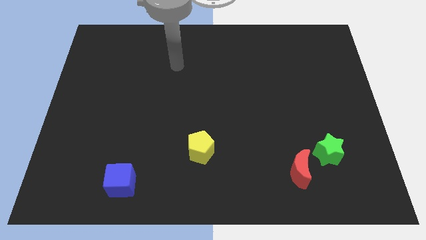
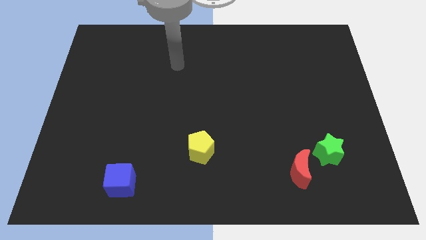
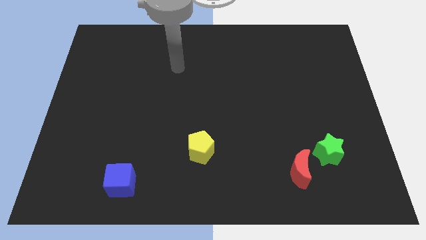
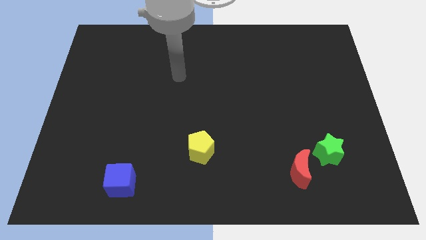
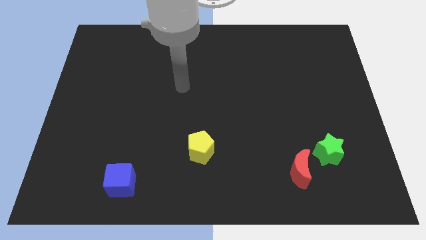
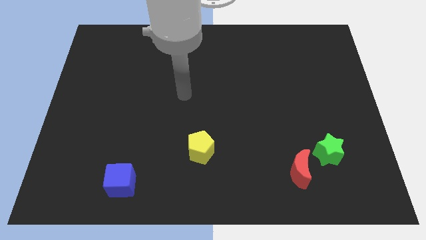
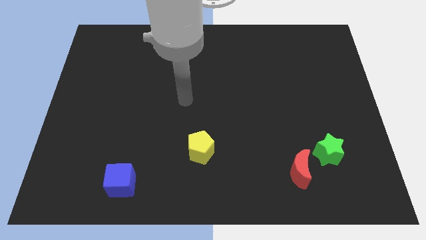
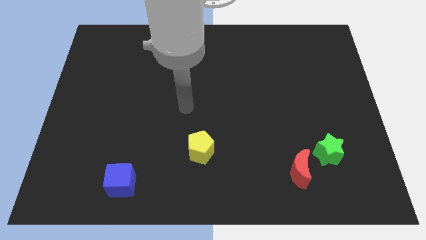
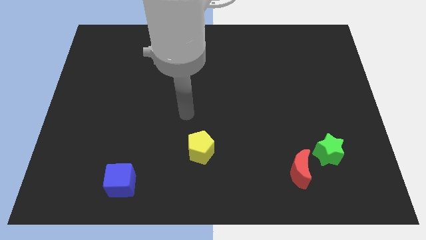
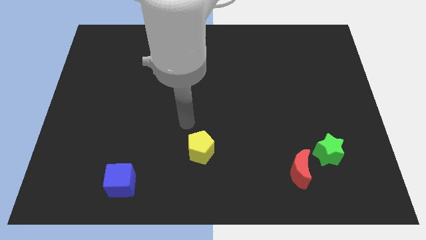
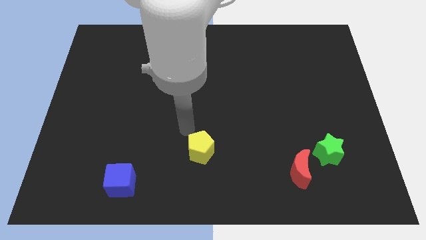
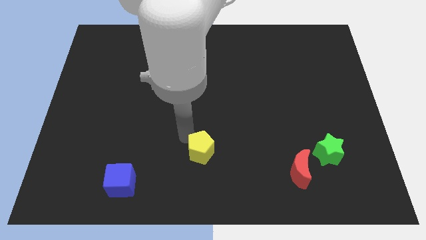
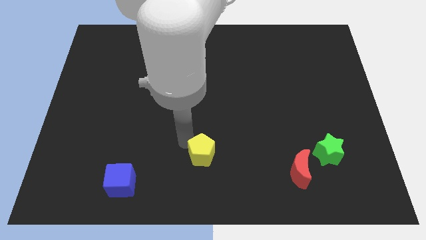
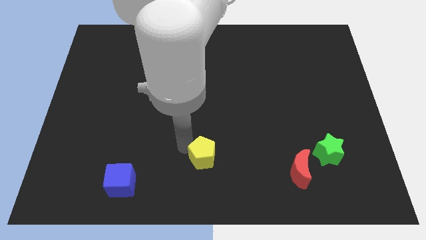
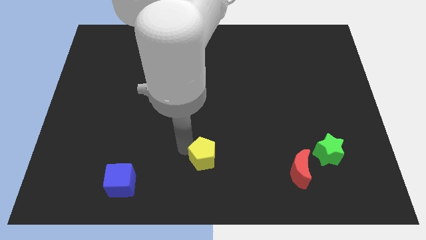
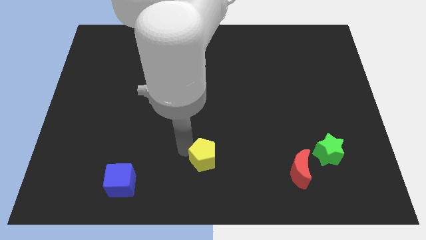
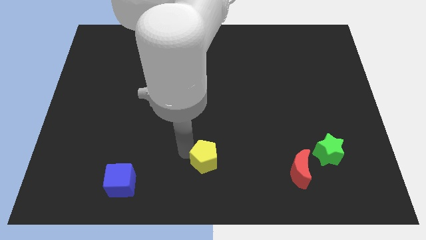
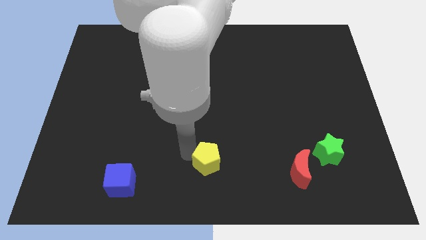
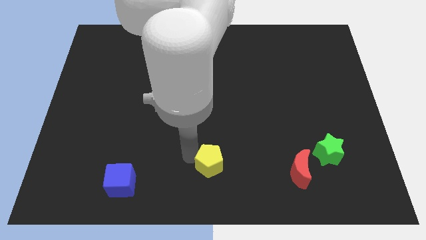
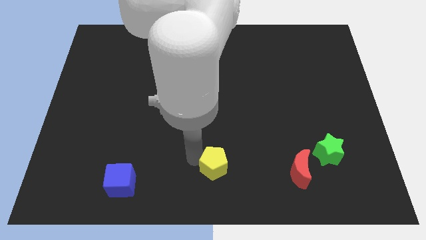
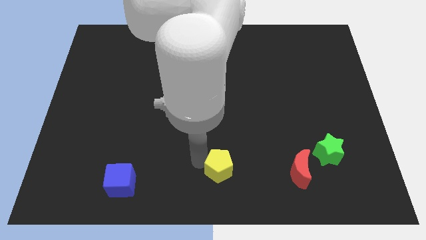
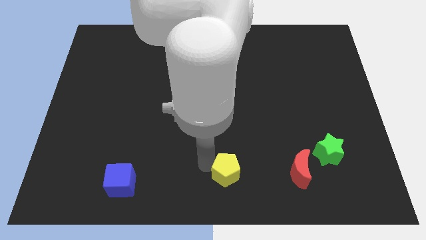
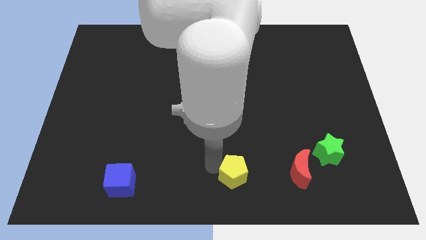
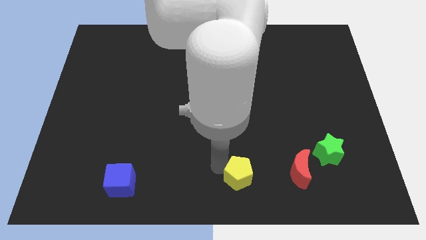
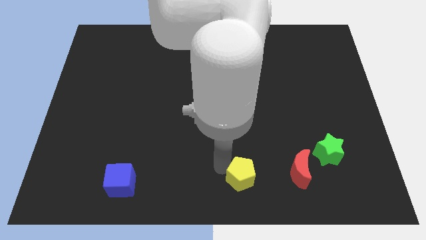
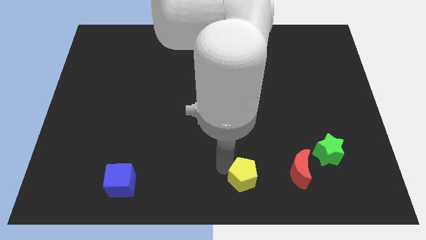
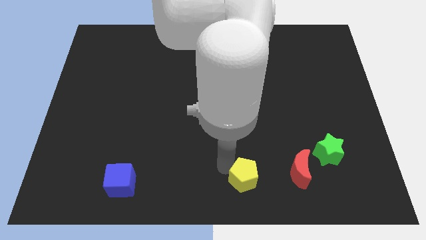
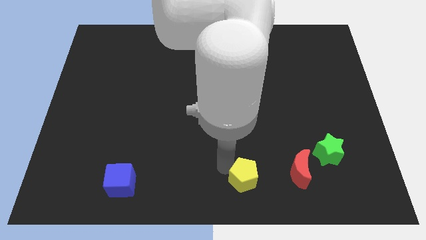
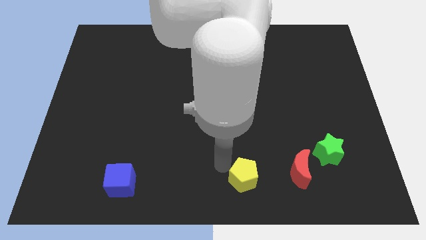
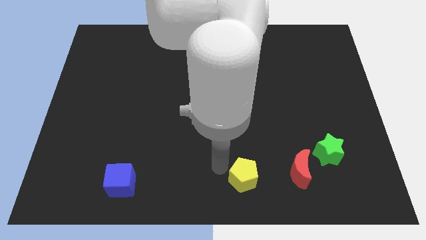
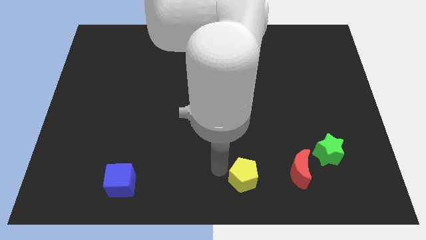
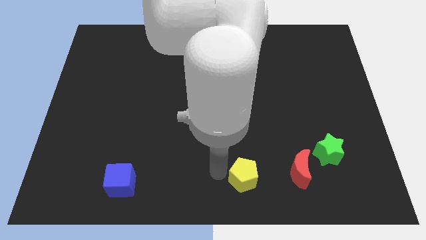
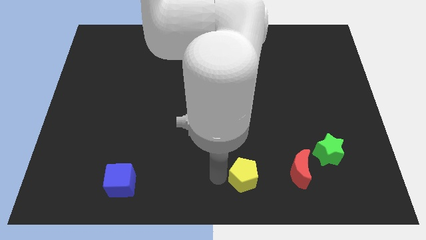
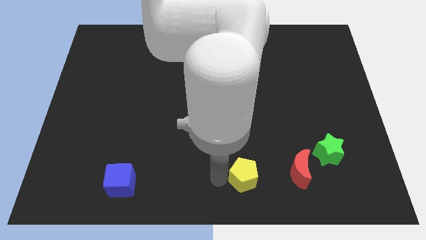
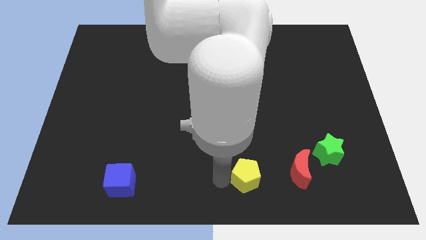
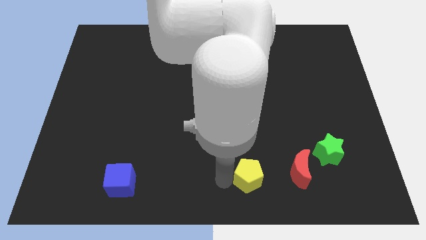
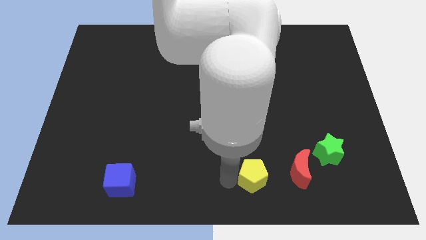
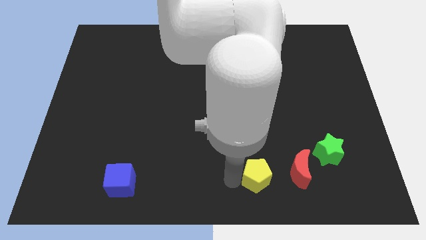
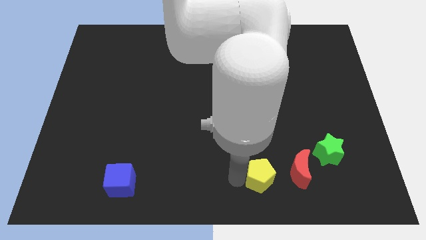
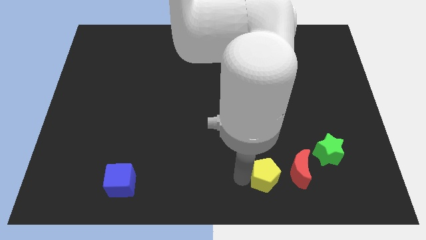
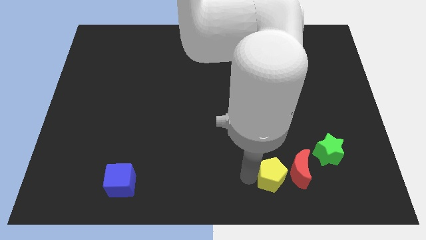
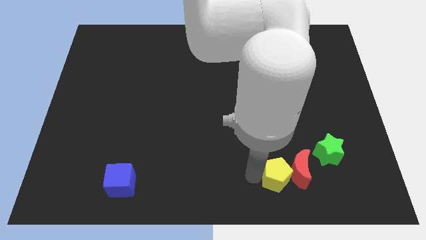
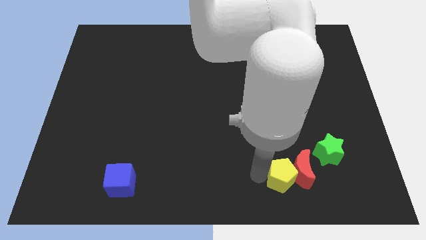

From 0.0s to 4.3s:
push the yellow block close to the moon

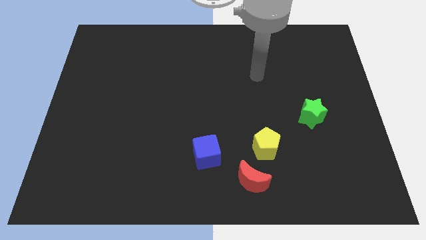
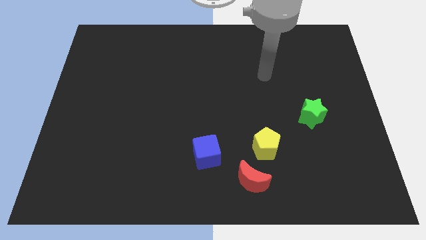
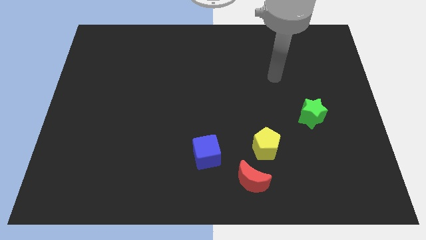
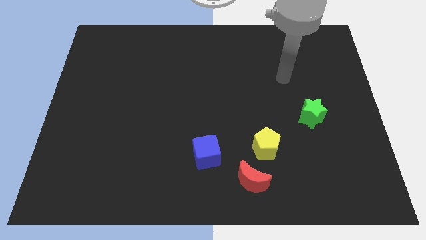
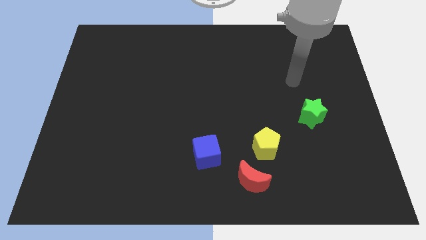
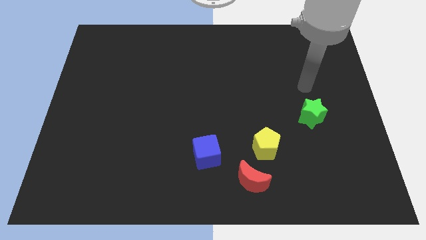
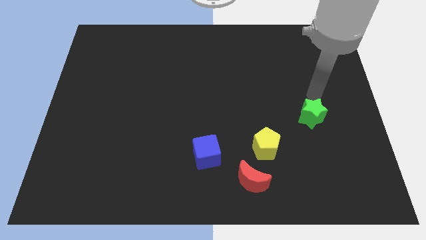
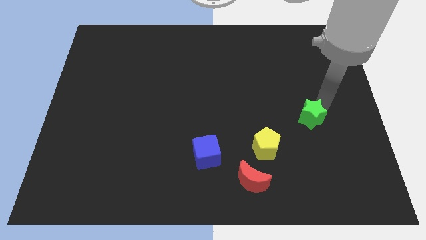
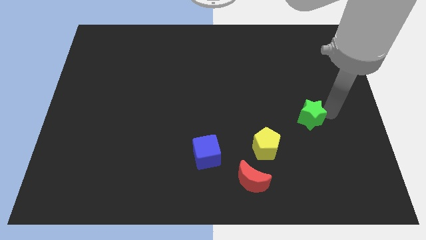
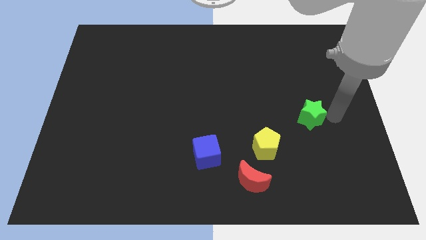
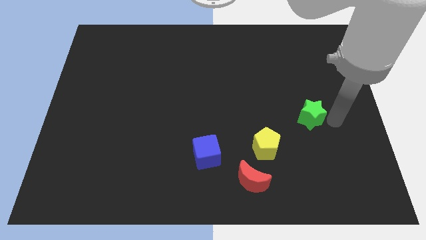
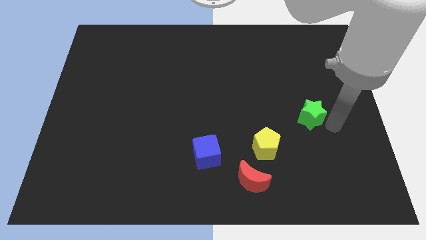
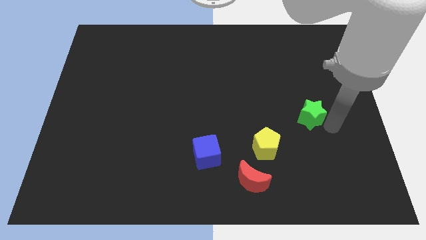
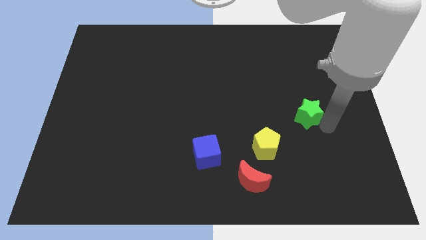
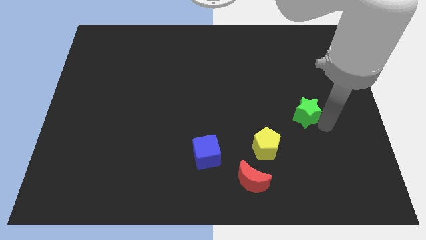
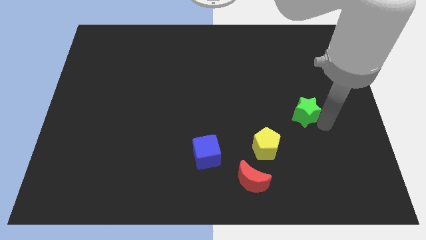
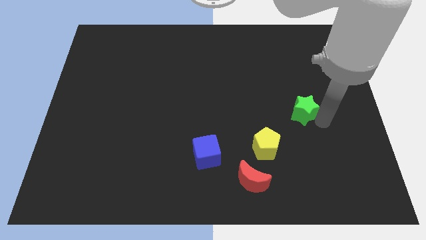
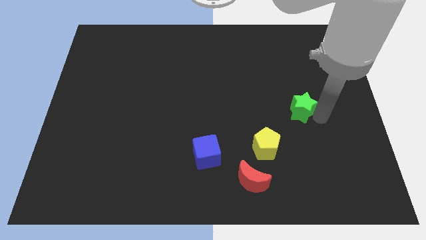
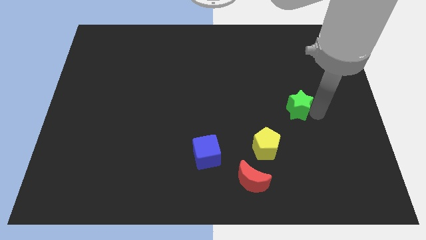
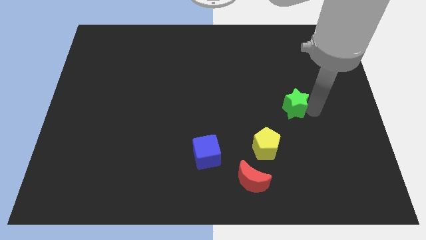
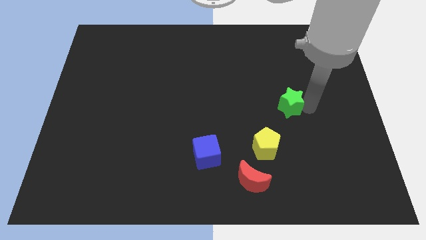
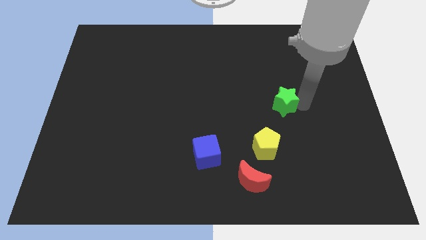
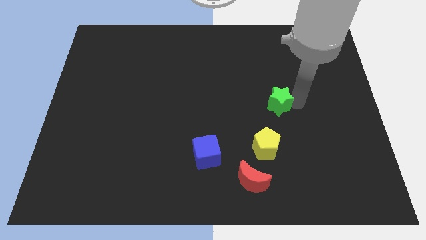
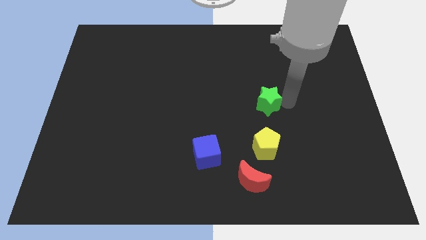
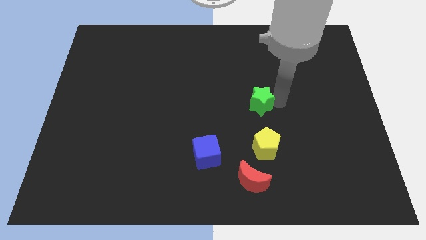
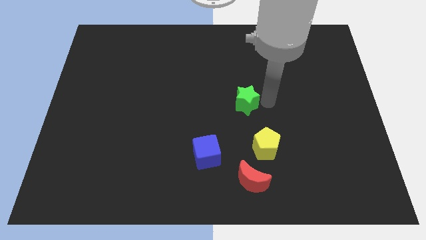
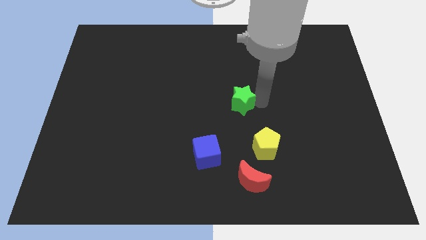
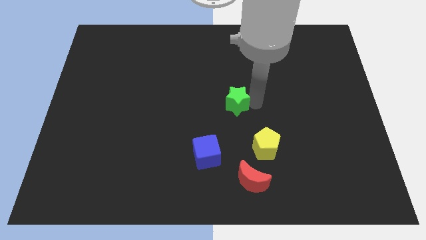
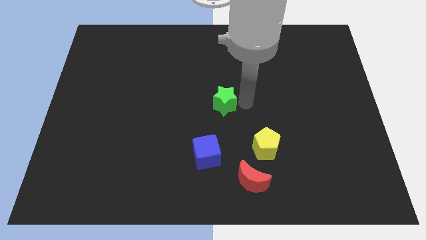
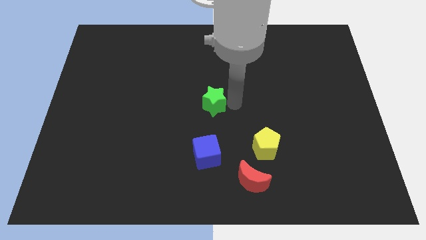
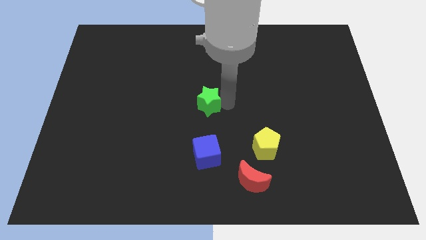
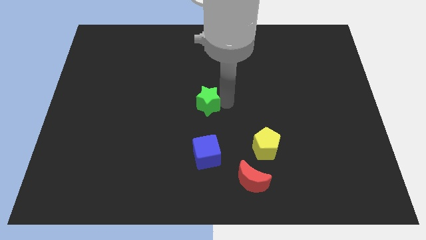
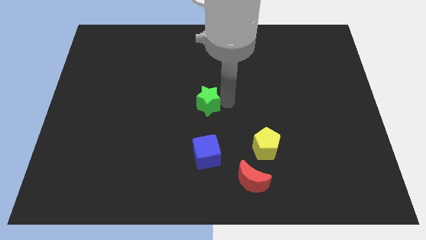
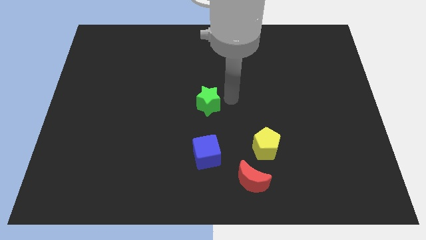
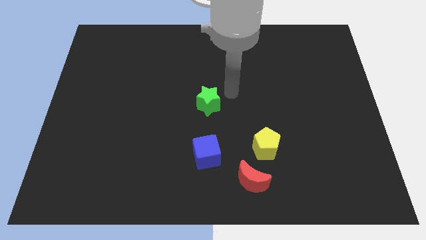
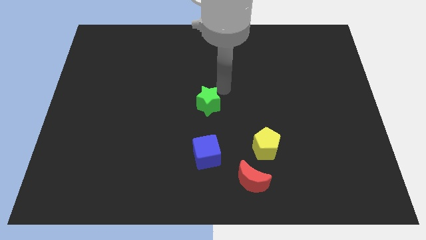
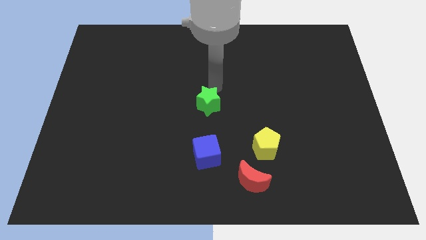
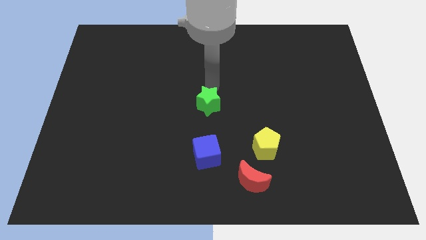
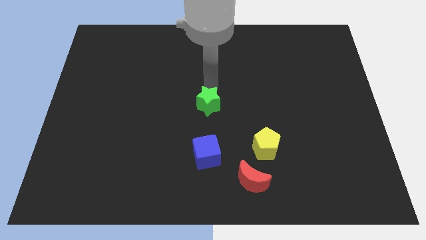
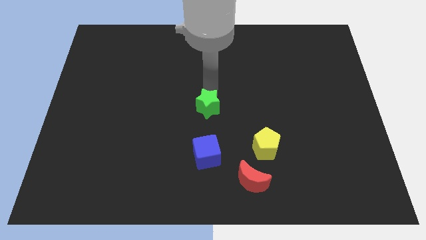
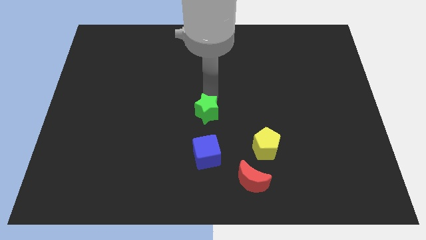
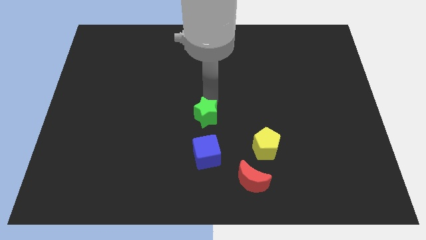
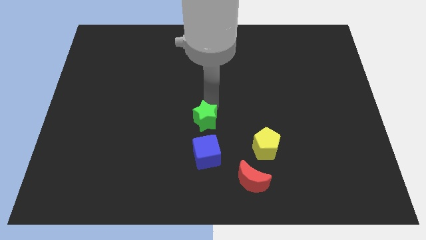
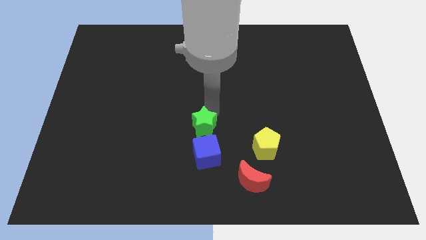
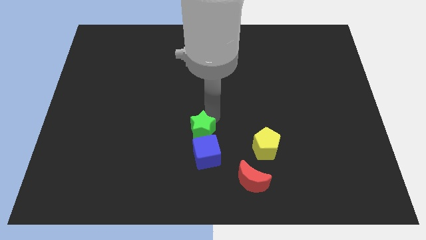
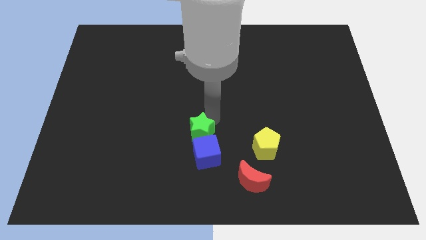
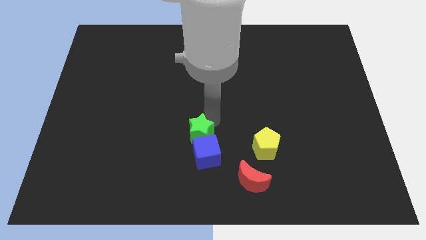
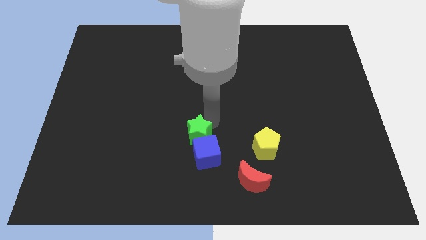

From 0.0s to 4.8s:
push the star close to the blue cube
